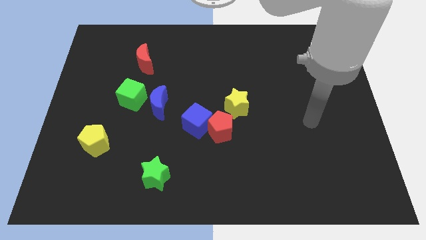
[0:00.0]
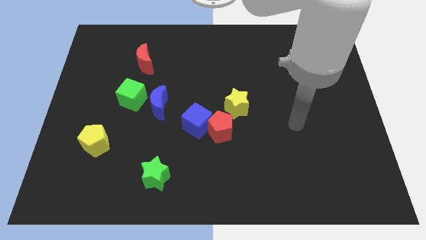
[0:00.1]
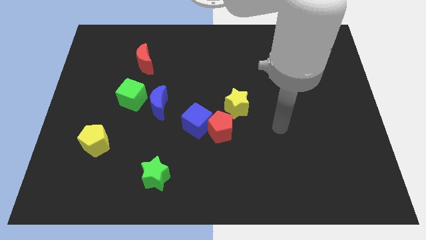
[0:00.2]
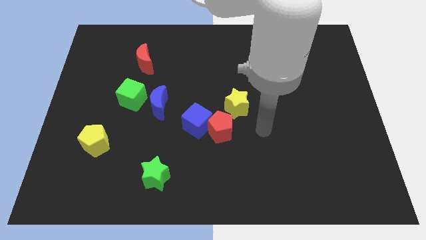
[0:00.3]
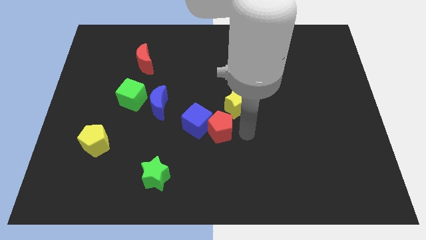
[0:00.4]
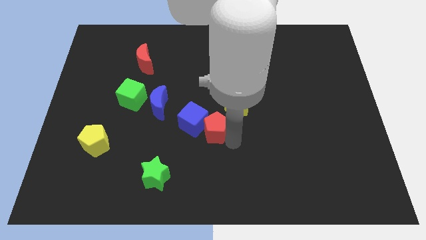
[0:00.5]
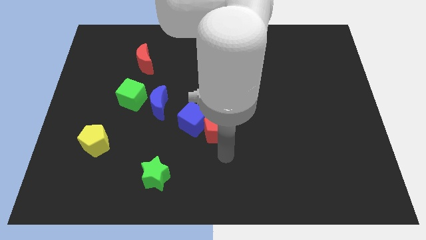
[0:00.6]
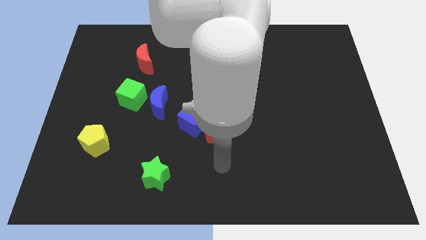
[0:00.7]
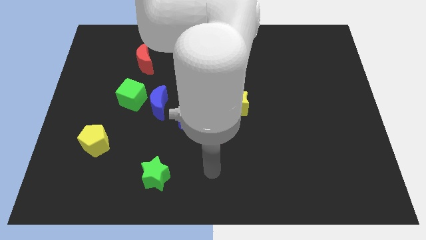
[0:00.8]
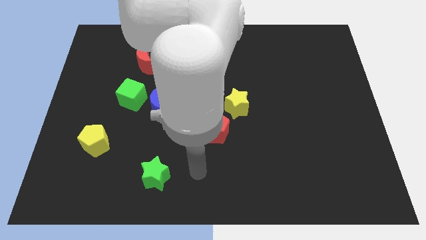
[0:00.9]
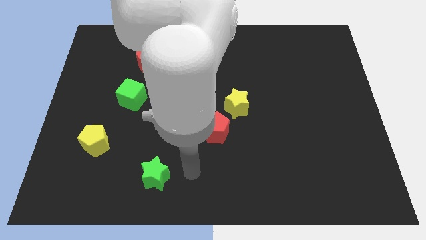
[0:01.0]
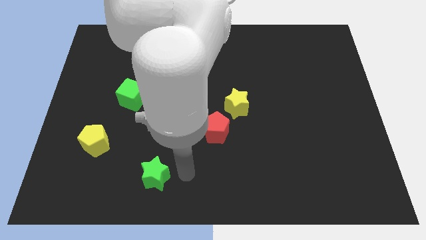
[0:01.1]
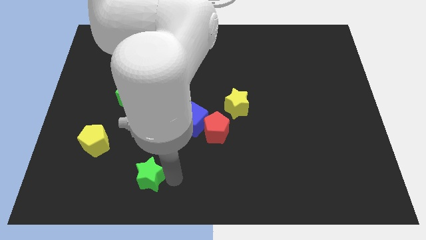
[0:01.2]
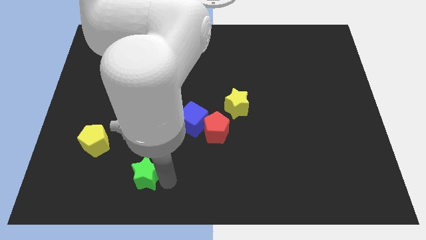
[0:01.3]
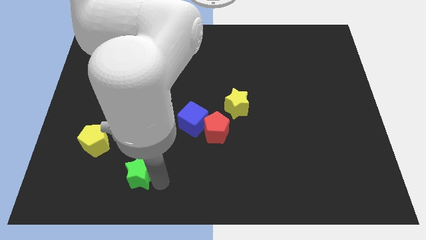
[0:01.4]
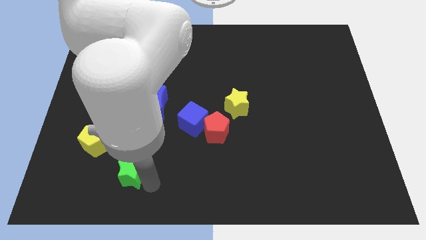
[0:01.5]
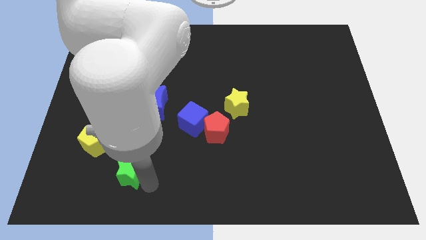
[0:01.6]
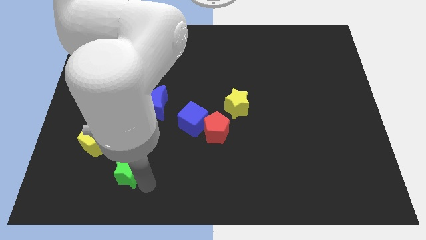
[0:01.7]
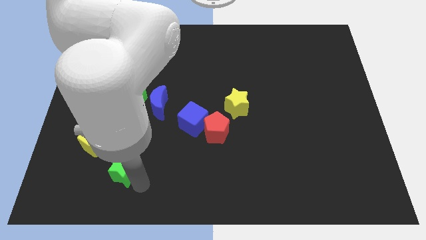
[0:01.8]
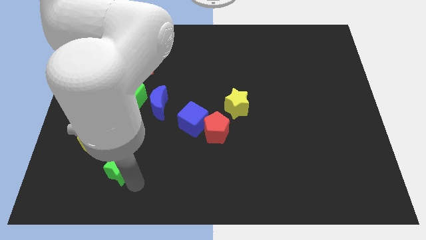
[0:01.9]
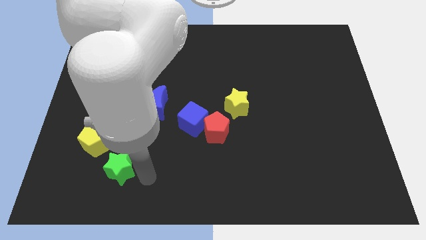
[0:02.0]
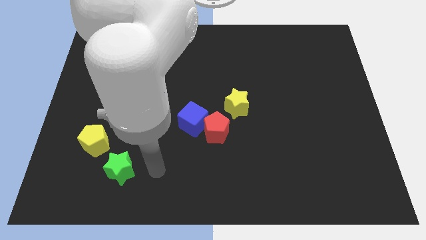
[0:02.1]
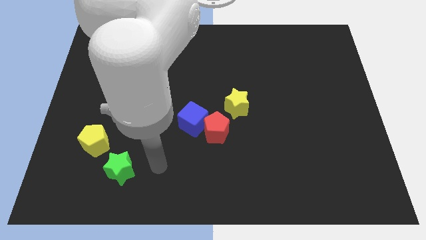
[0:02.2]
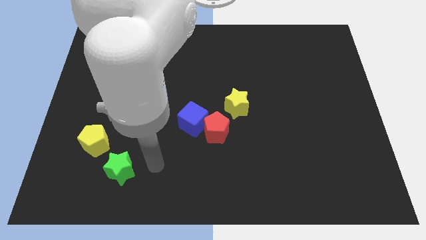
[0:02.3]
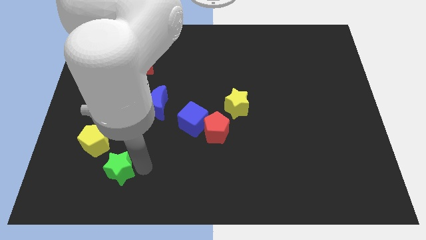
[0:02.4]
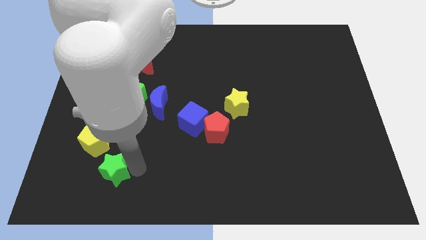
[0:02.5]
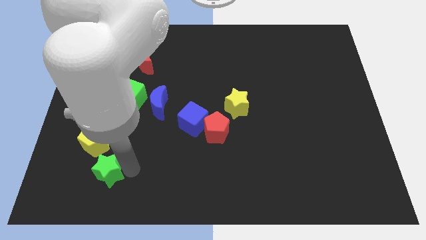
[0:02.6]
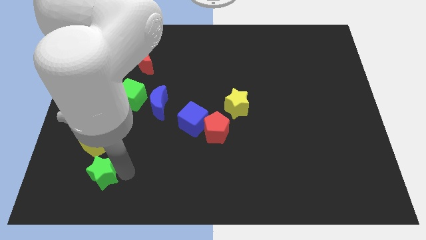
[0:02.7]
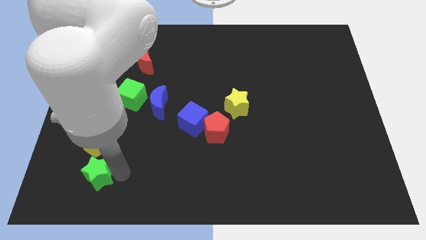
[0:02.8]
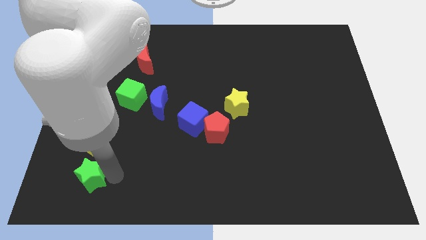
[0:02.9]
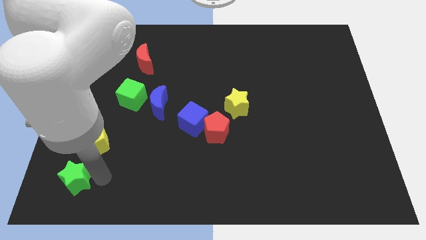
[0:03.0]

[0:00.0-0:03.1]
push the green star to the bottom of the yellow pentagon

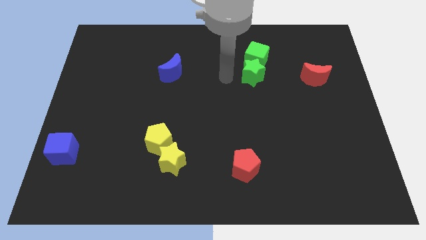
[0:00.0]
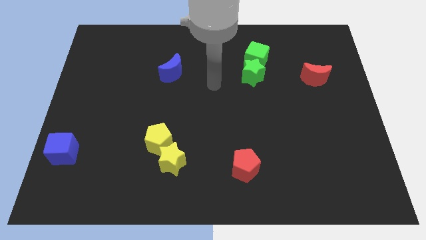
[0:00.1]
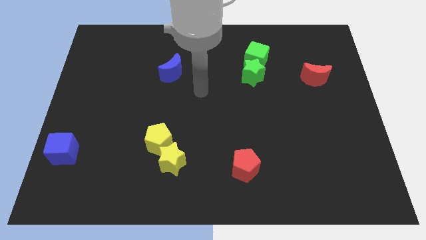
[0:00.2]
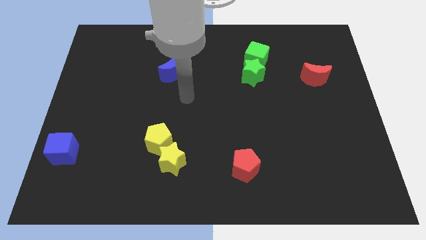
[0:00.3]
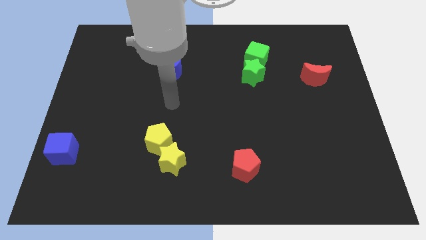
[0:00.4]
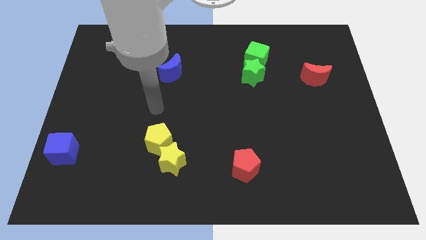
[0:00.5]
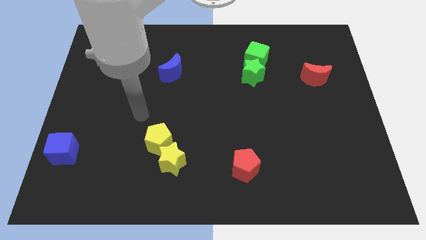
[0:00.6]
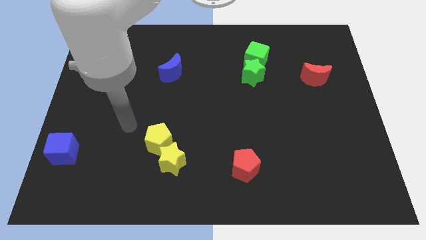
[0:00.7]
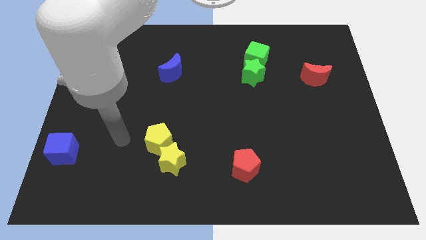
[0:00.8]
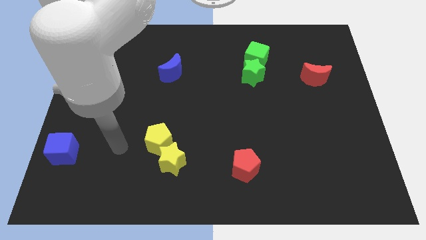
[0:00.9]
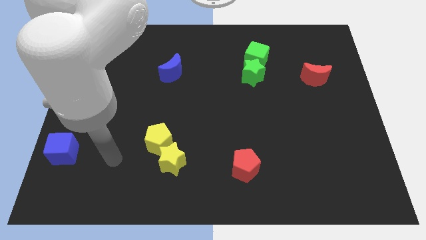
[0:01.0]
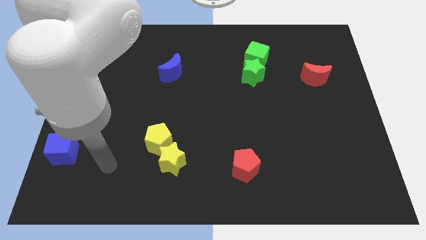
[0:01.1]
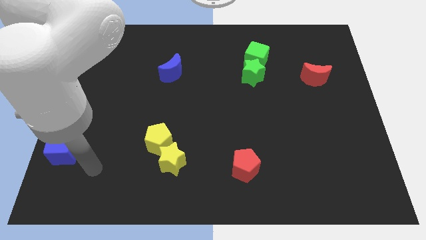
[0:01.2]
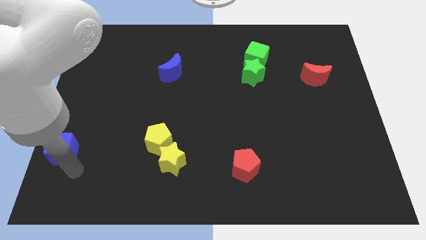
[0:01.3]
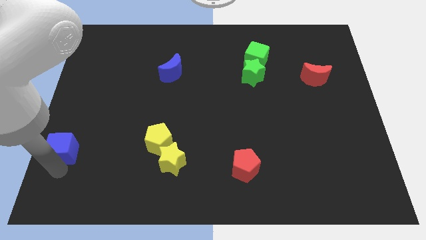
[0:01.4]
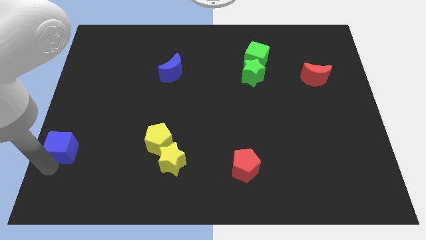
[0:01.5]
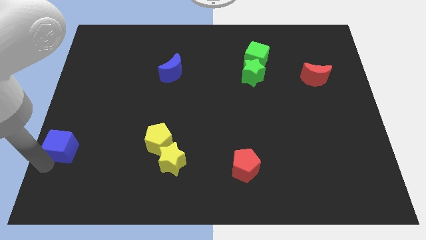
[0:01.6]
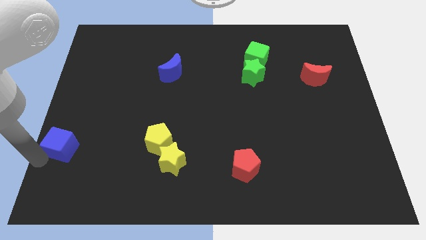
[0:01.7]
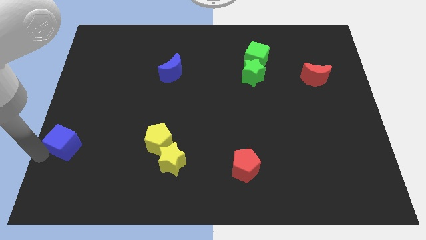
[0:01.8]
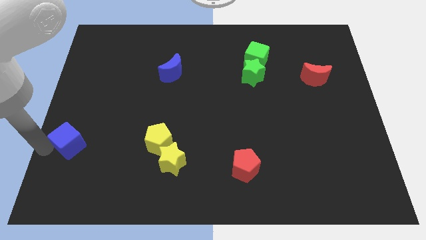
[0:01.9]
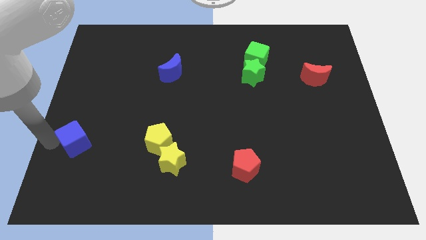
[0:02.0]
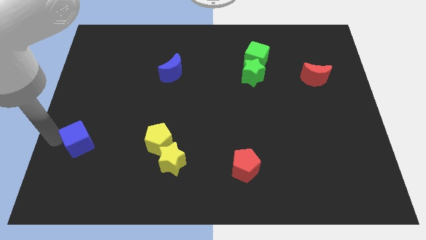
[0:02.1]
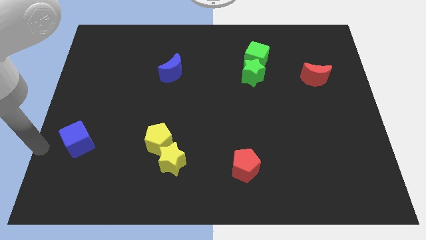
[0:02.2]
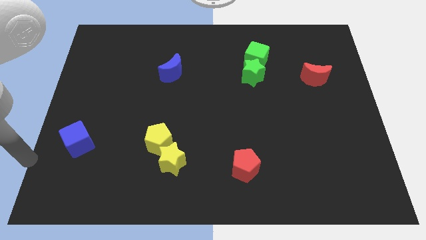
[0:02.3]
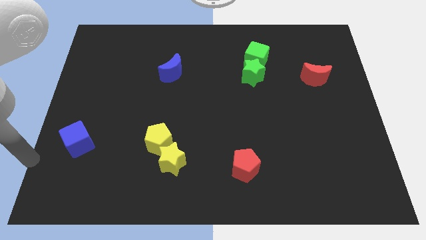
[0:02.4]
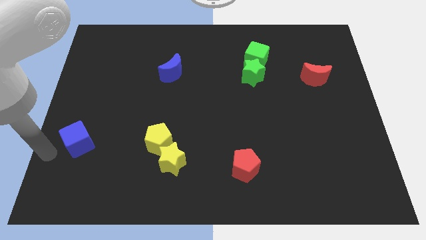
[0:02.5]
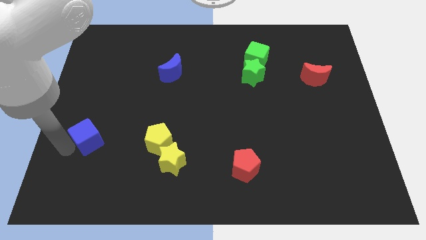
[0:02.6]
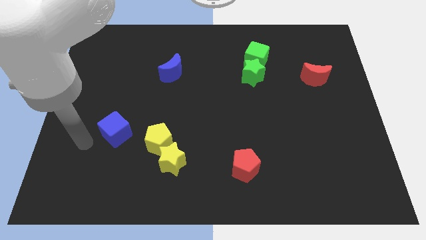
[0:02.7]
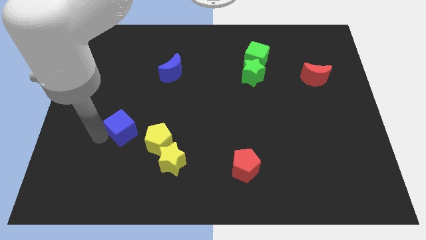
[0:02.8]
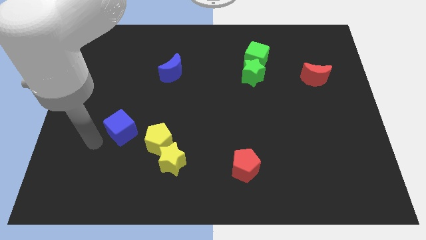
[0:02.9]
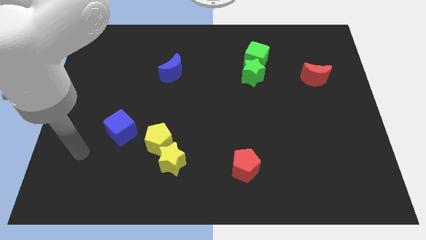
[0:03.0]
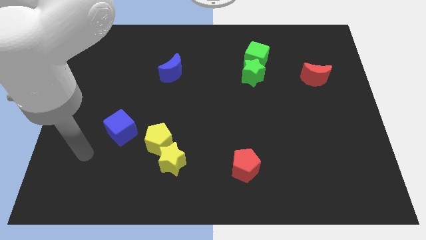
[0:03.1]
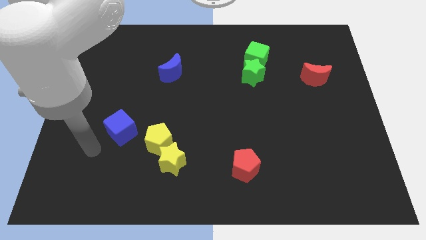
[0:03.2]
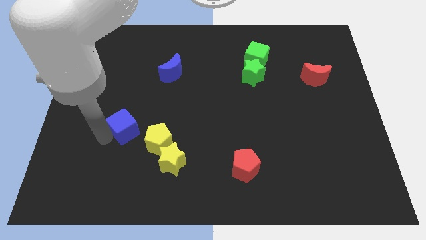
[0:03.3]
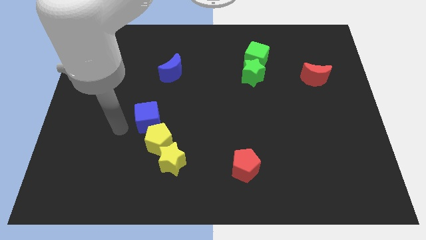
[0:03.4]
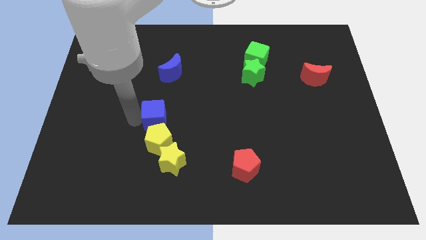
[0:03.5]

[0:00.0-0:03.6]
place the blue cube above the yellow pentagon

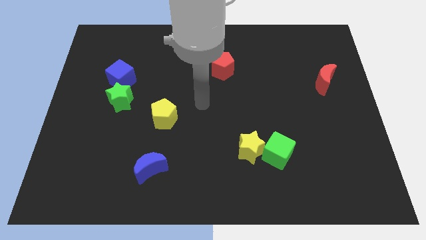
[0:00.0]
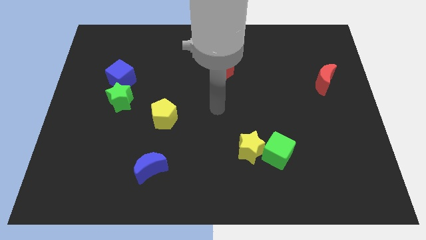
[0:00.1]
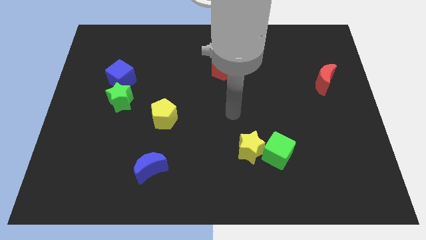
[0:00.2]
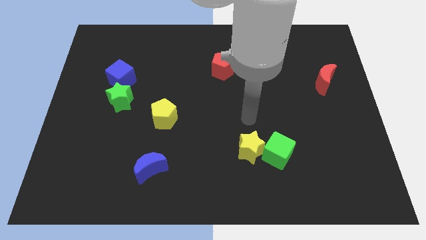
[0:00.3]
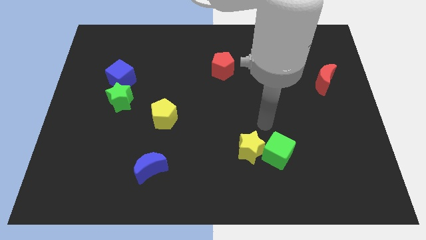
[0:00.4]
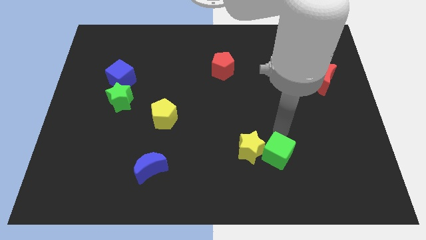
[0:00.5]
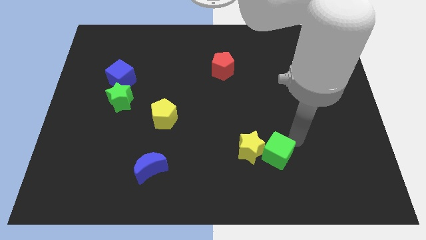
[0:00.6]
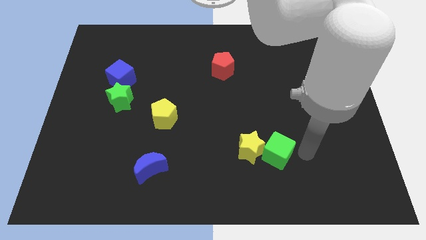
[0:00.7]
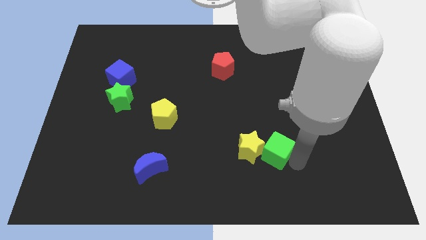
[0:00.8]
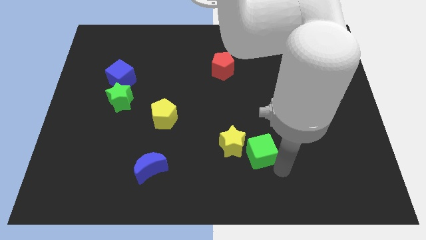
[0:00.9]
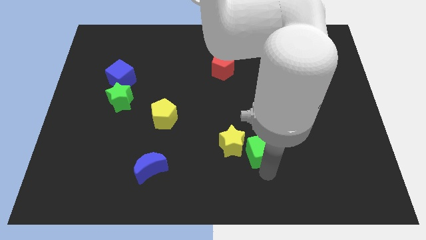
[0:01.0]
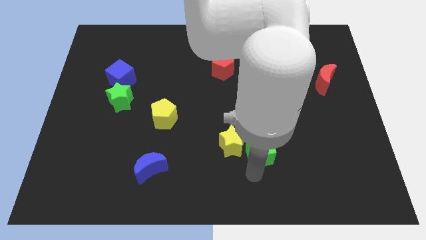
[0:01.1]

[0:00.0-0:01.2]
move your arm below the green cube

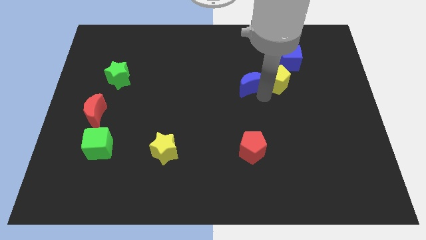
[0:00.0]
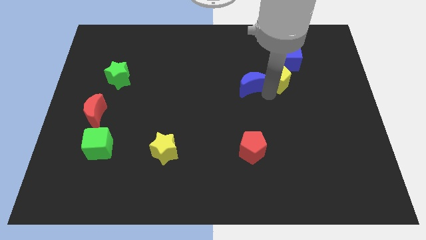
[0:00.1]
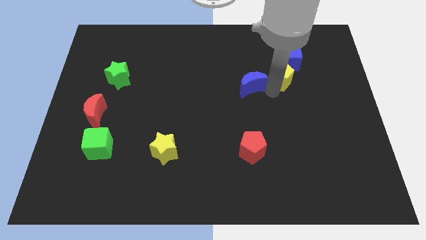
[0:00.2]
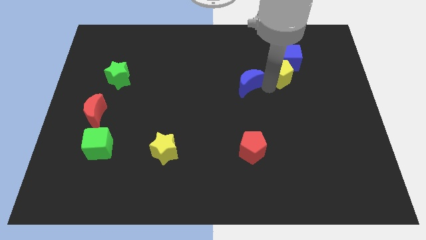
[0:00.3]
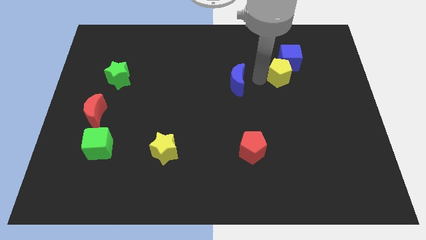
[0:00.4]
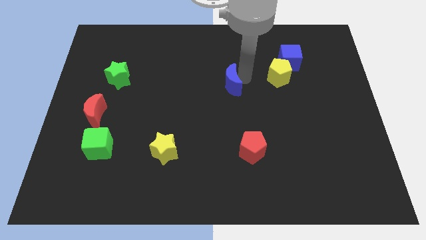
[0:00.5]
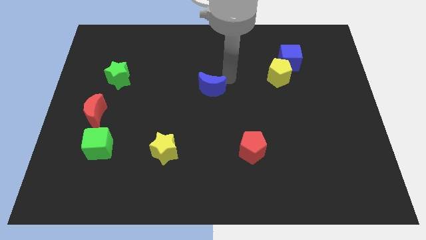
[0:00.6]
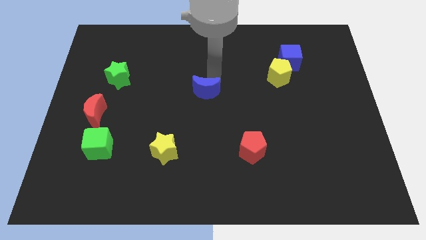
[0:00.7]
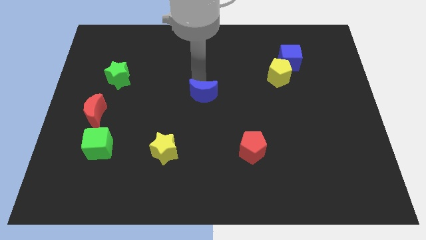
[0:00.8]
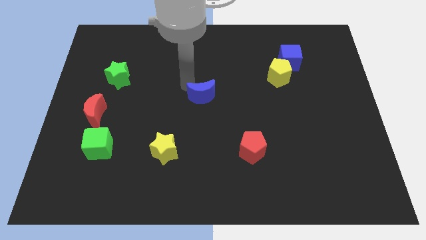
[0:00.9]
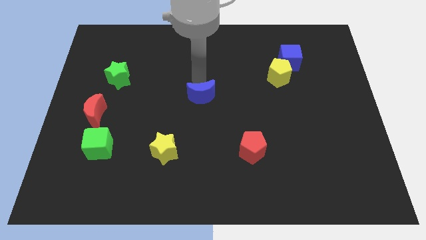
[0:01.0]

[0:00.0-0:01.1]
push the blue moon to the center of the board
